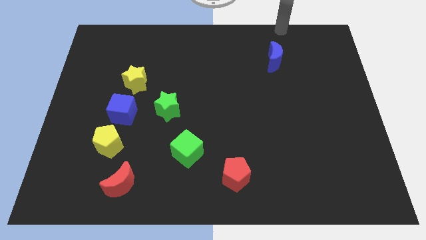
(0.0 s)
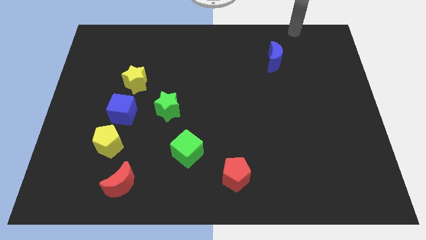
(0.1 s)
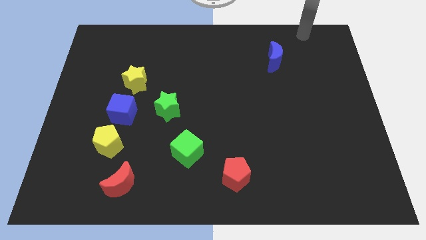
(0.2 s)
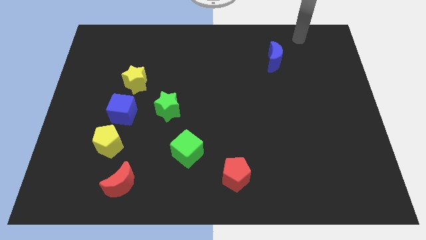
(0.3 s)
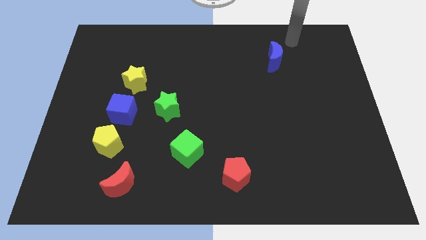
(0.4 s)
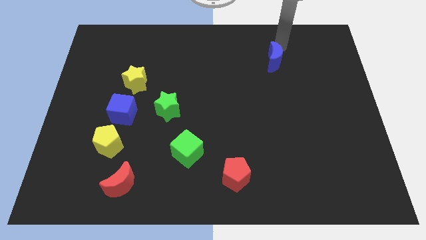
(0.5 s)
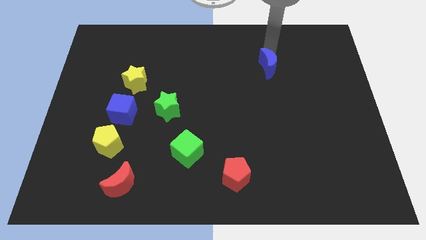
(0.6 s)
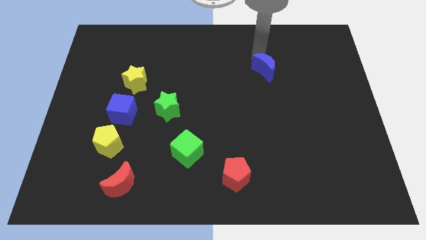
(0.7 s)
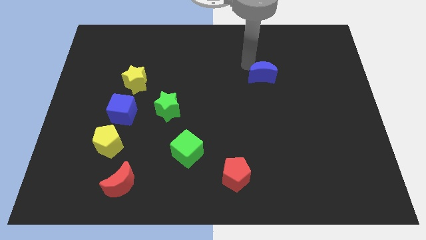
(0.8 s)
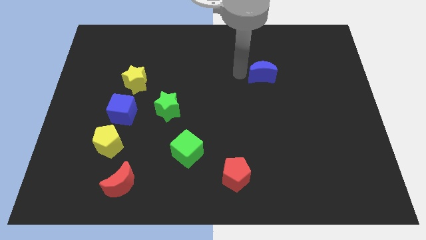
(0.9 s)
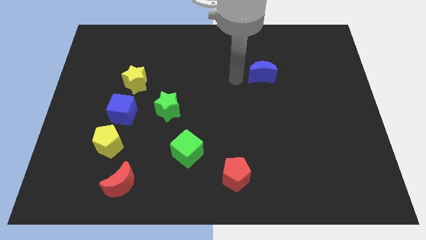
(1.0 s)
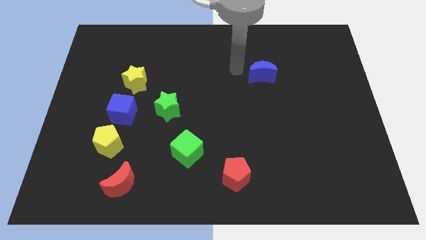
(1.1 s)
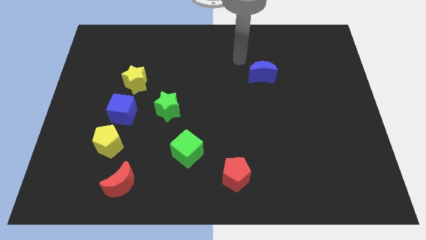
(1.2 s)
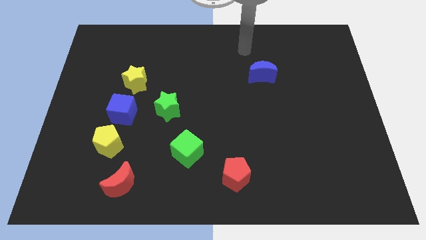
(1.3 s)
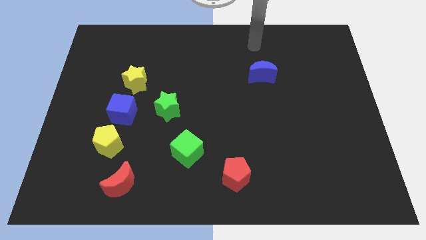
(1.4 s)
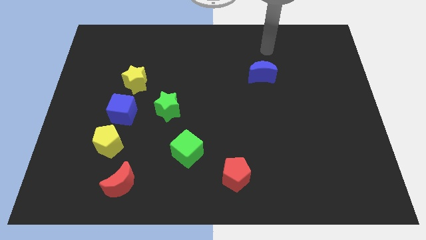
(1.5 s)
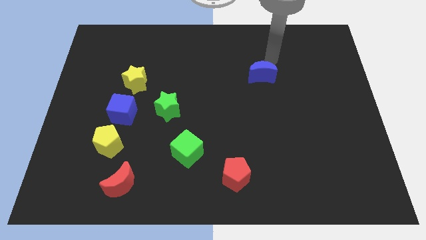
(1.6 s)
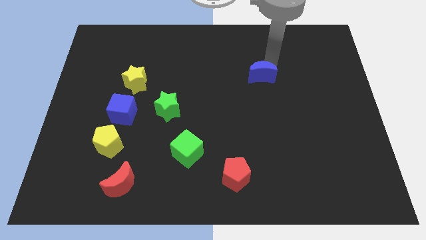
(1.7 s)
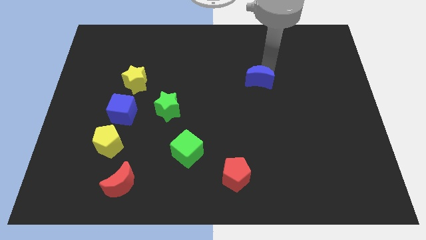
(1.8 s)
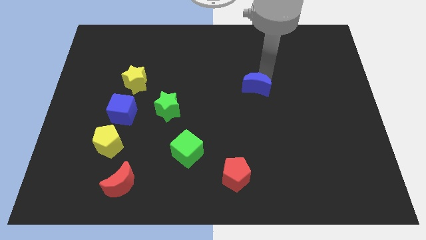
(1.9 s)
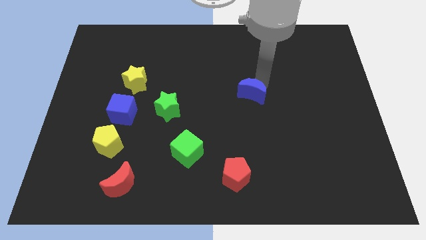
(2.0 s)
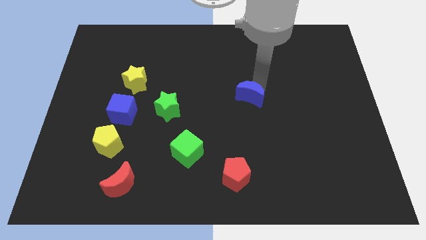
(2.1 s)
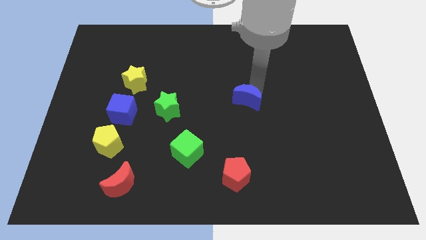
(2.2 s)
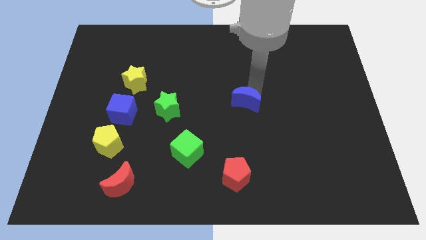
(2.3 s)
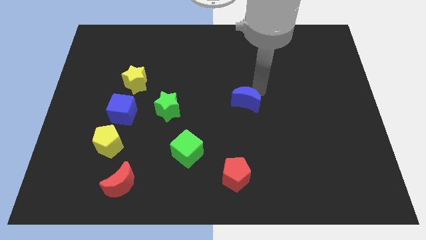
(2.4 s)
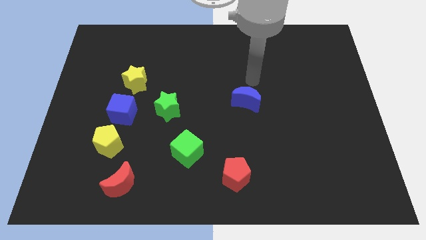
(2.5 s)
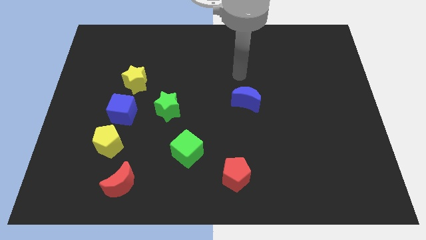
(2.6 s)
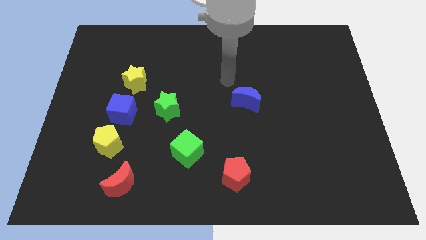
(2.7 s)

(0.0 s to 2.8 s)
push the blue moon to the horizontal right of the green star

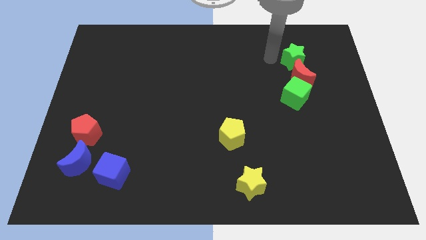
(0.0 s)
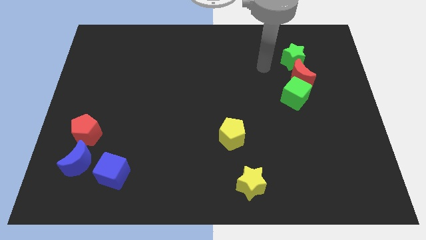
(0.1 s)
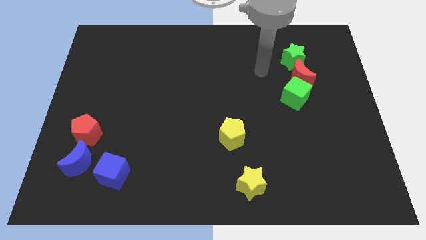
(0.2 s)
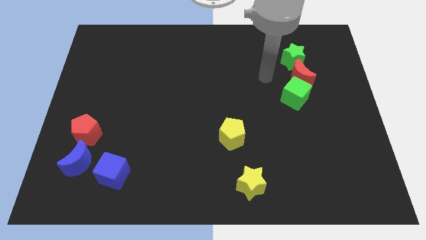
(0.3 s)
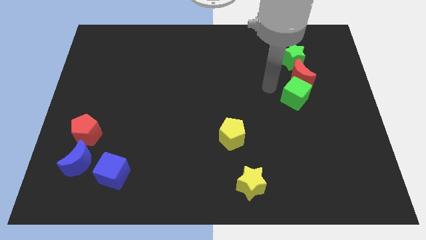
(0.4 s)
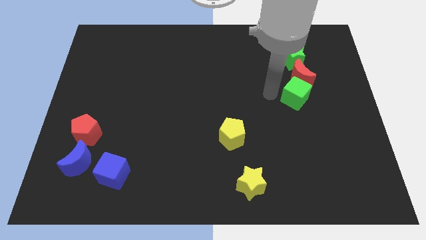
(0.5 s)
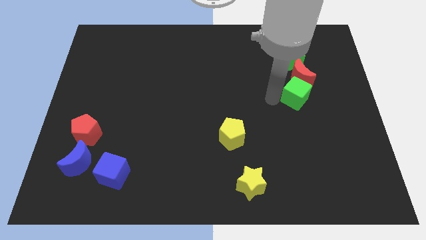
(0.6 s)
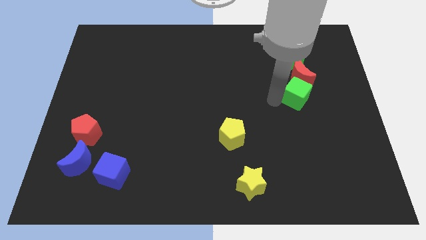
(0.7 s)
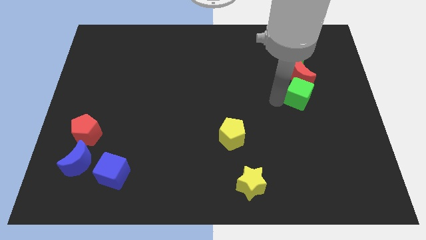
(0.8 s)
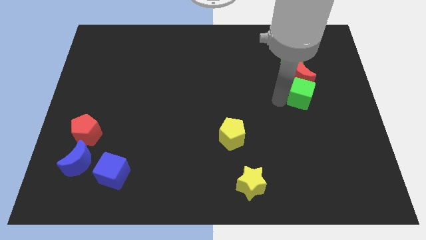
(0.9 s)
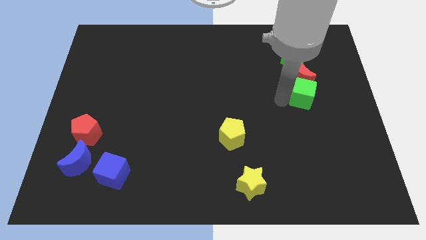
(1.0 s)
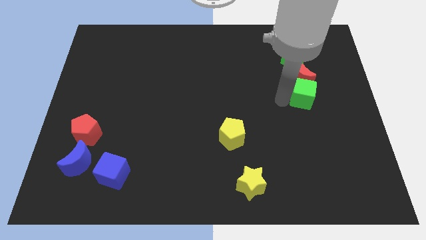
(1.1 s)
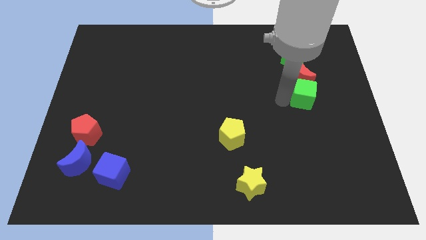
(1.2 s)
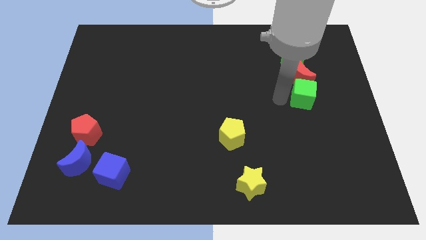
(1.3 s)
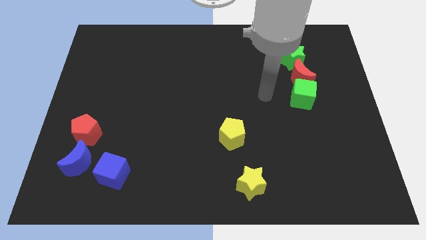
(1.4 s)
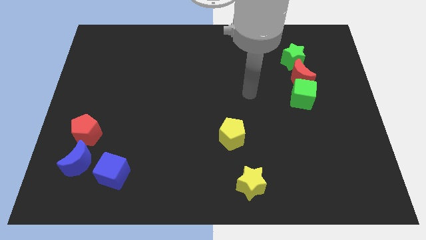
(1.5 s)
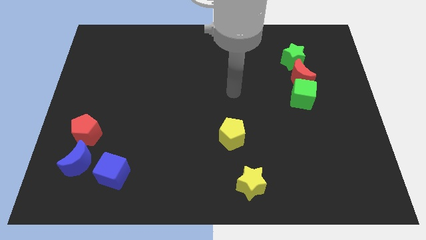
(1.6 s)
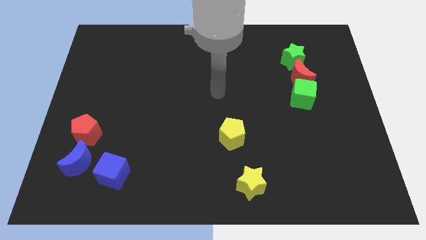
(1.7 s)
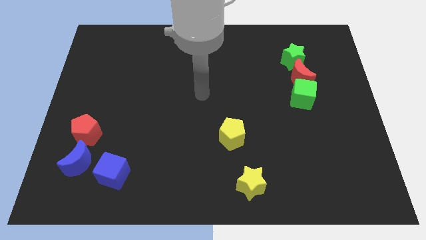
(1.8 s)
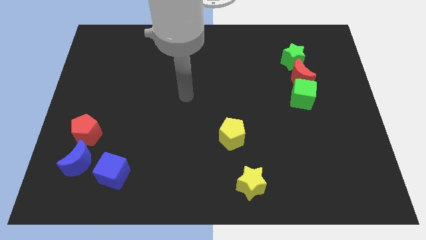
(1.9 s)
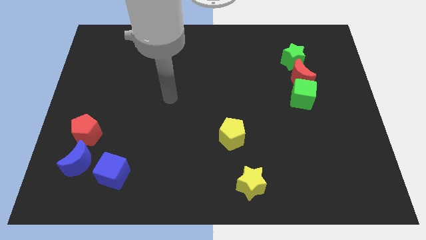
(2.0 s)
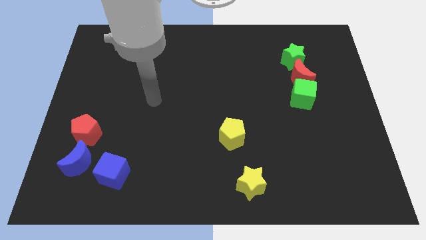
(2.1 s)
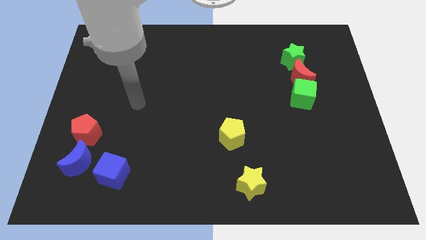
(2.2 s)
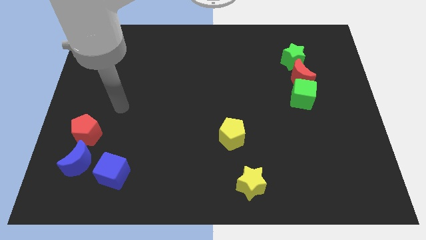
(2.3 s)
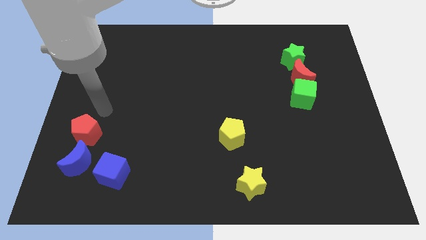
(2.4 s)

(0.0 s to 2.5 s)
adjust the green cube below the red crescent

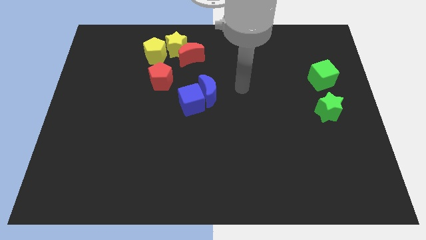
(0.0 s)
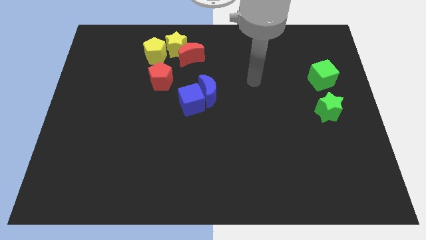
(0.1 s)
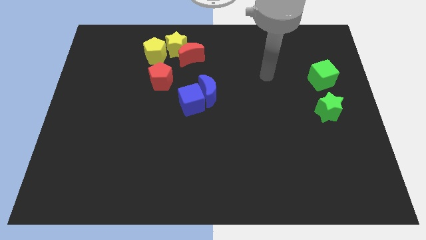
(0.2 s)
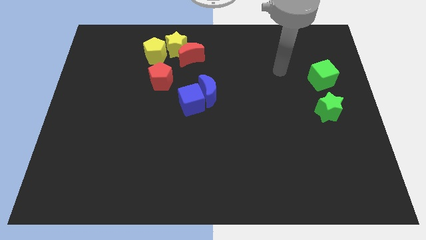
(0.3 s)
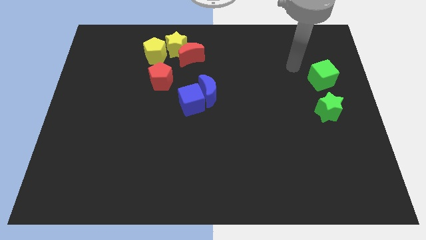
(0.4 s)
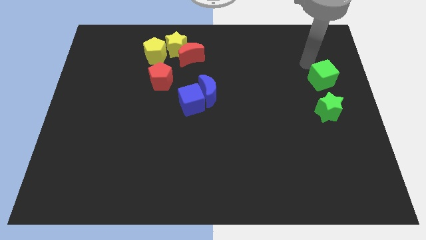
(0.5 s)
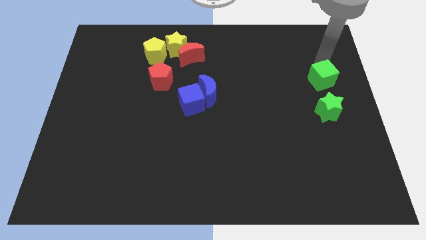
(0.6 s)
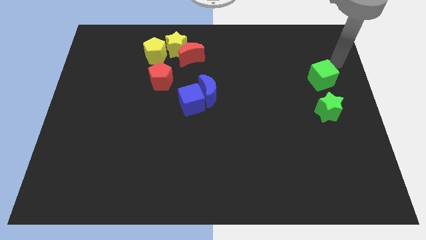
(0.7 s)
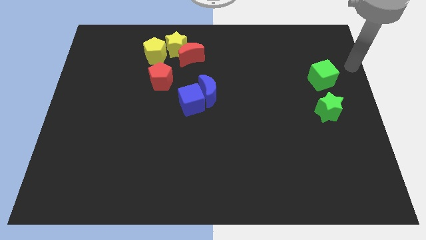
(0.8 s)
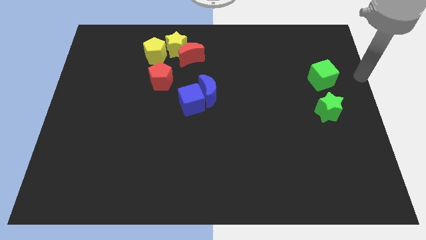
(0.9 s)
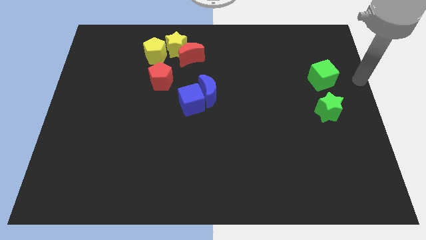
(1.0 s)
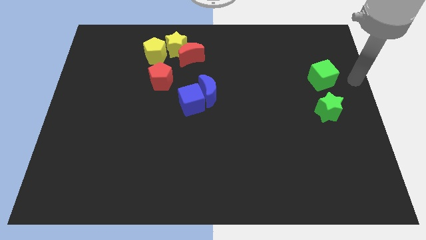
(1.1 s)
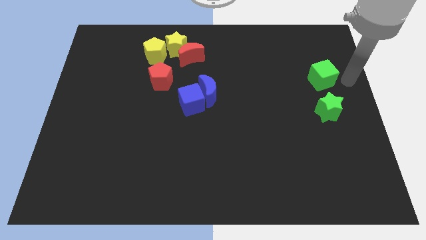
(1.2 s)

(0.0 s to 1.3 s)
point your arm towards the right side of the green cube

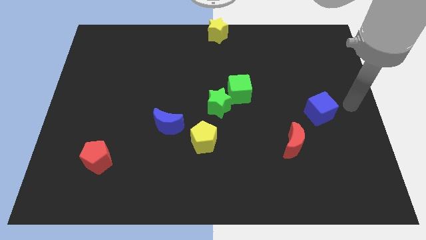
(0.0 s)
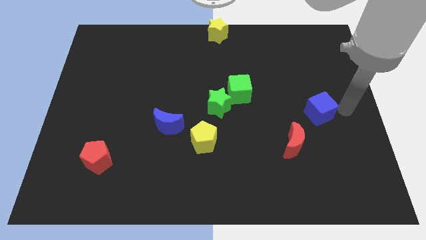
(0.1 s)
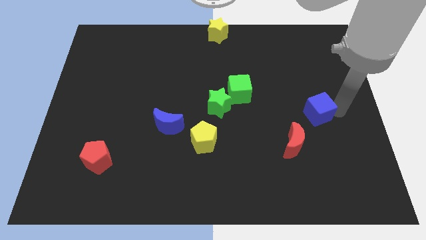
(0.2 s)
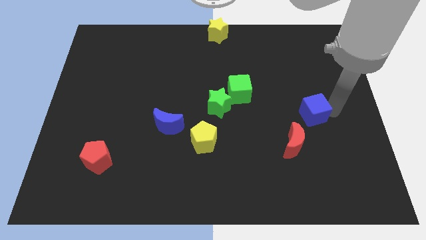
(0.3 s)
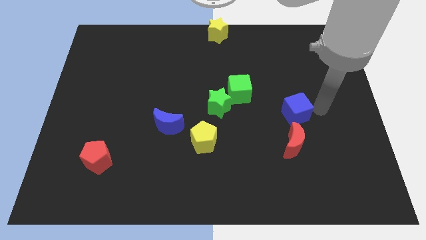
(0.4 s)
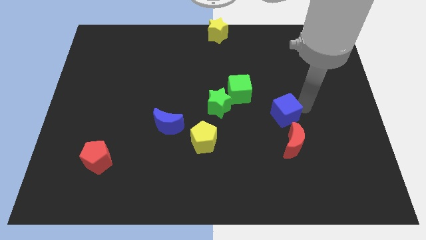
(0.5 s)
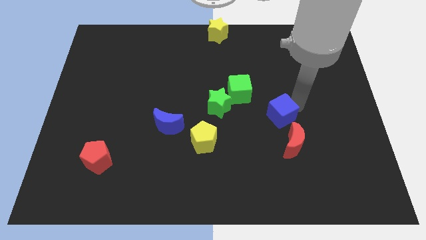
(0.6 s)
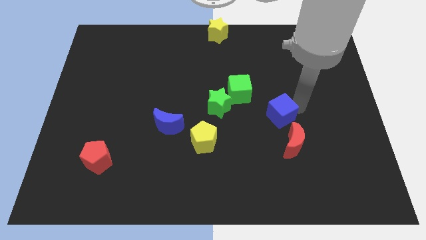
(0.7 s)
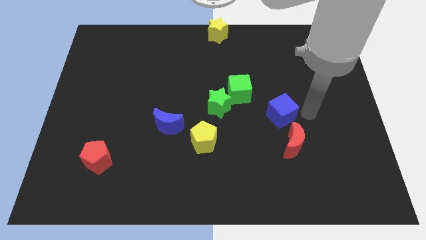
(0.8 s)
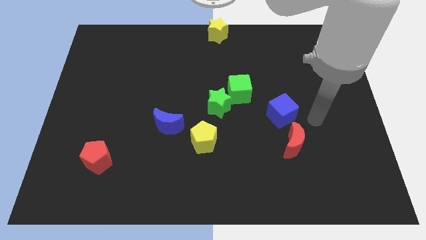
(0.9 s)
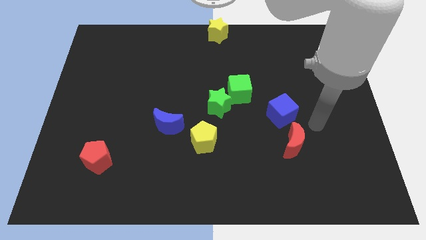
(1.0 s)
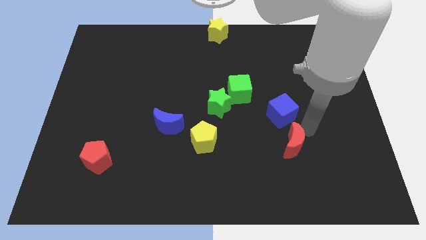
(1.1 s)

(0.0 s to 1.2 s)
move the blue cube sightly left side

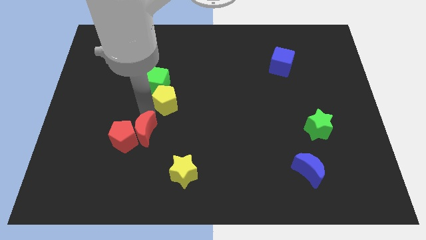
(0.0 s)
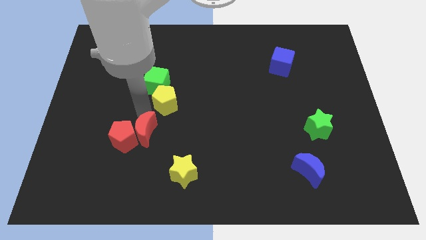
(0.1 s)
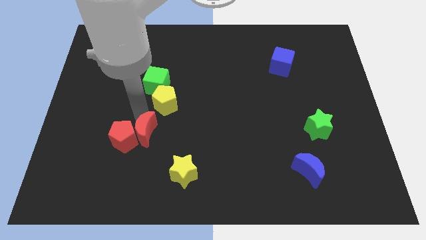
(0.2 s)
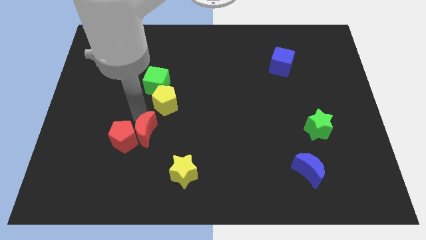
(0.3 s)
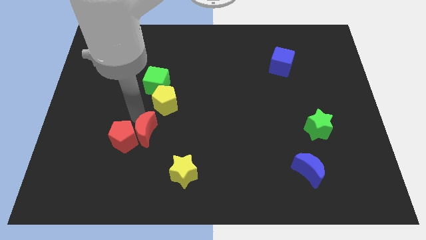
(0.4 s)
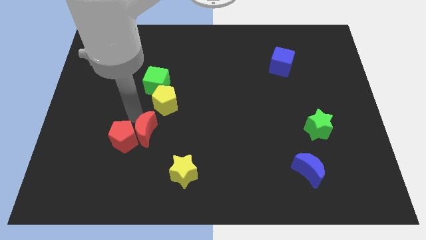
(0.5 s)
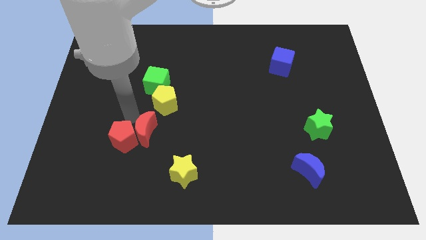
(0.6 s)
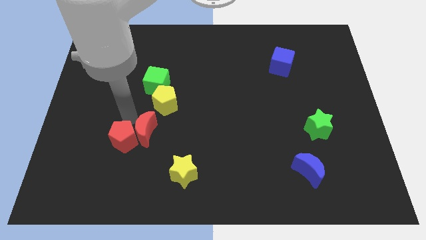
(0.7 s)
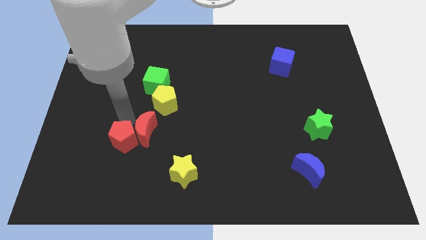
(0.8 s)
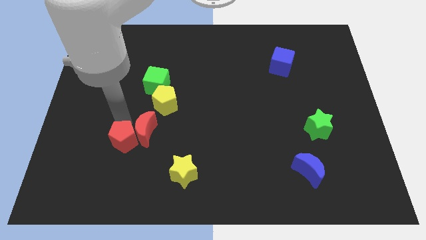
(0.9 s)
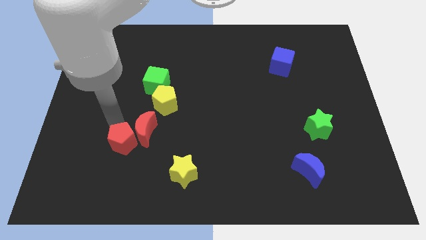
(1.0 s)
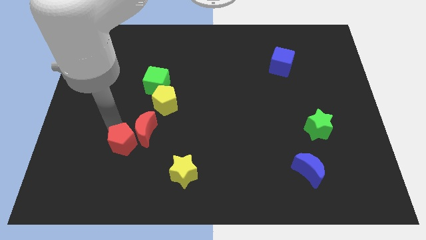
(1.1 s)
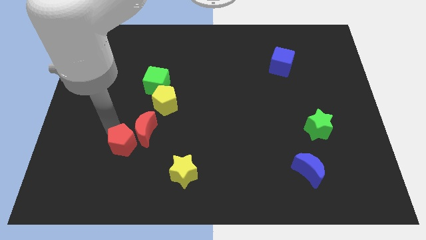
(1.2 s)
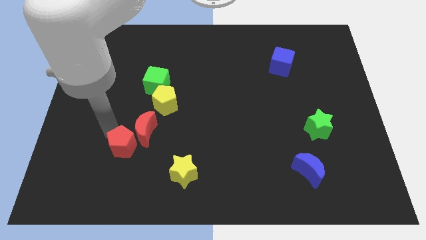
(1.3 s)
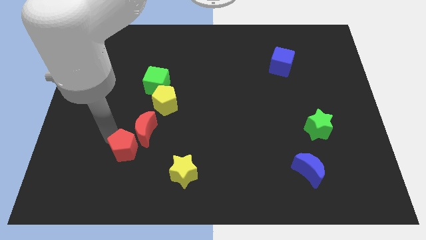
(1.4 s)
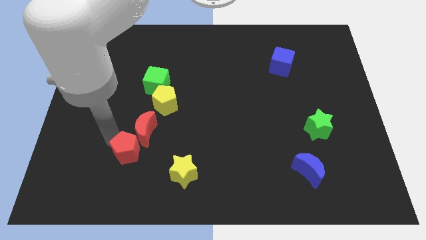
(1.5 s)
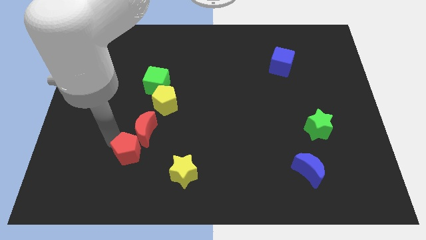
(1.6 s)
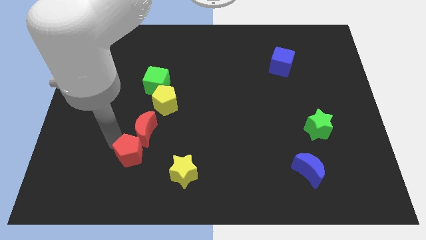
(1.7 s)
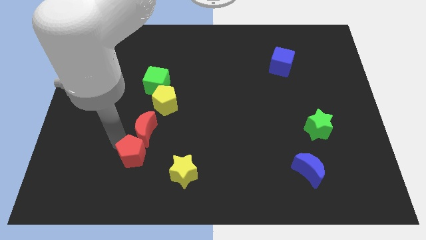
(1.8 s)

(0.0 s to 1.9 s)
move the red pentagon below the yellow moon
